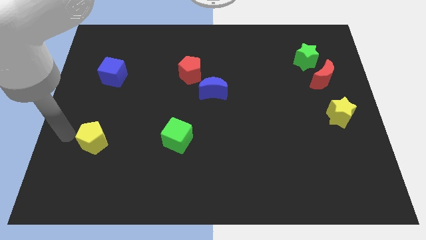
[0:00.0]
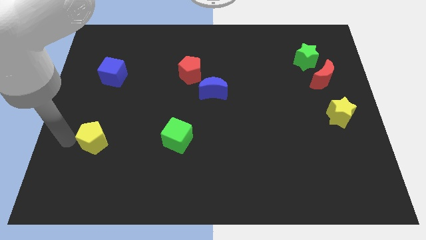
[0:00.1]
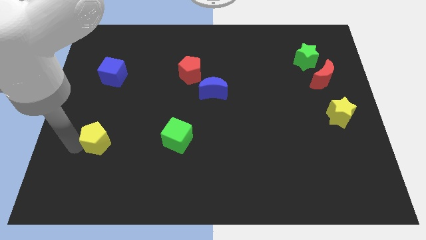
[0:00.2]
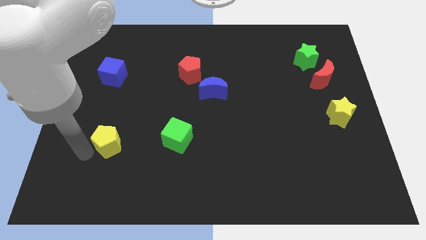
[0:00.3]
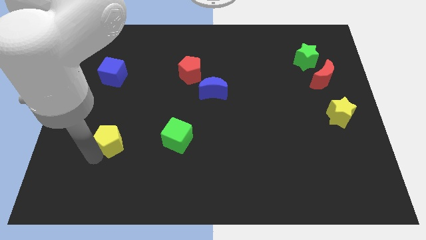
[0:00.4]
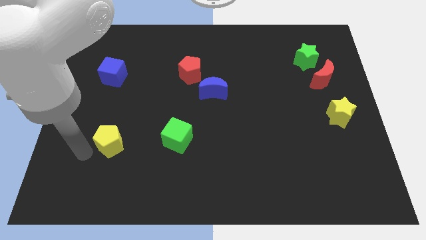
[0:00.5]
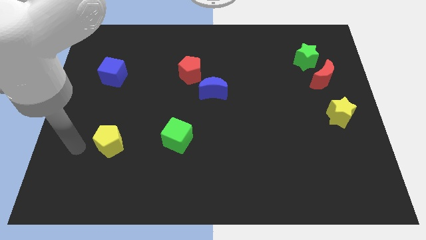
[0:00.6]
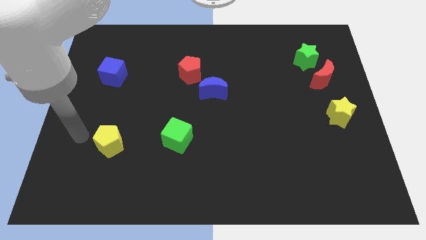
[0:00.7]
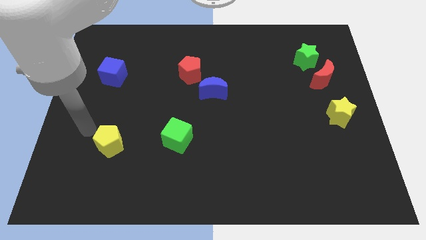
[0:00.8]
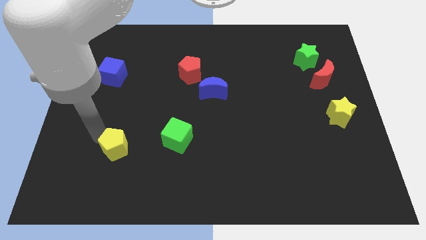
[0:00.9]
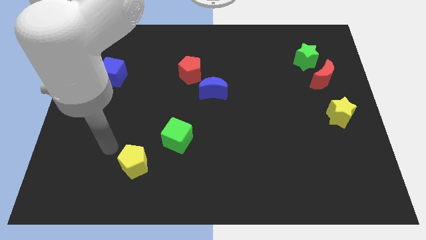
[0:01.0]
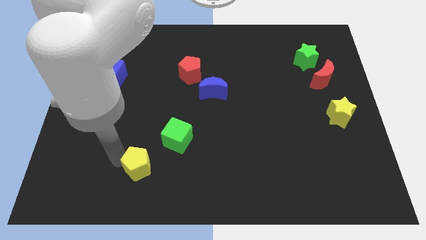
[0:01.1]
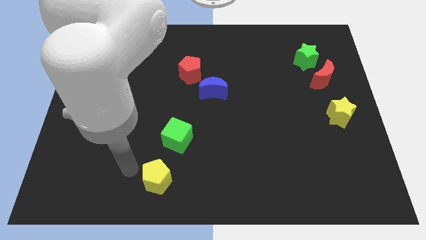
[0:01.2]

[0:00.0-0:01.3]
move the yellow pentagon from that particular place

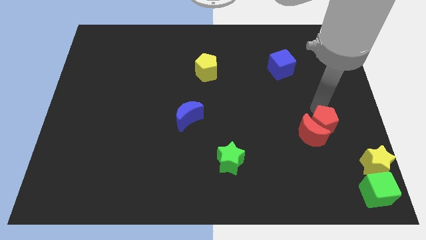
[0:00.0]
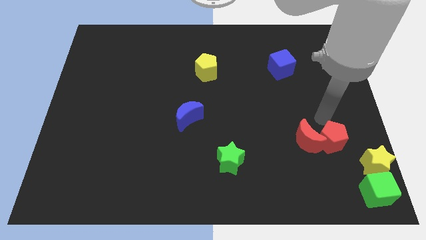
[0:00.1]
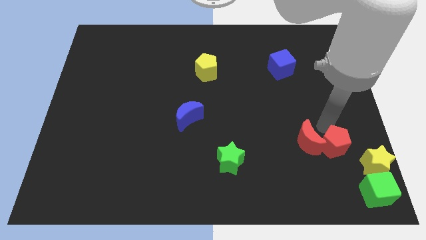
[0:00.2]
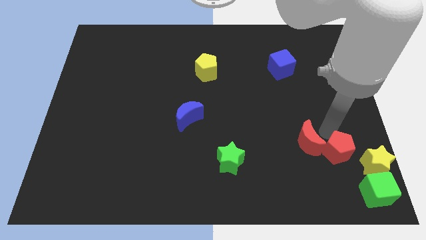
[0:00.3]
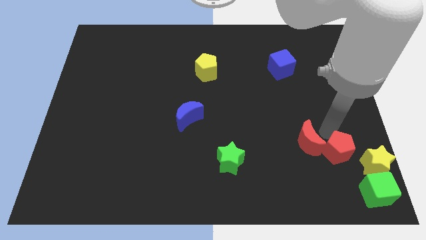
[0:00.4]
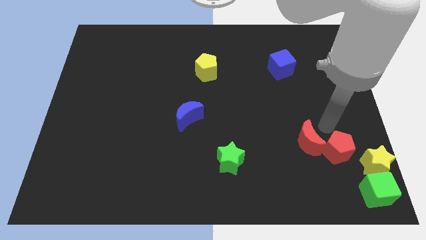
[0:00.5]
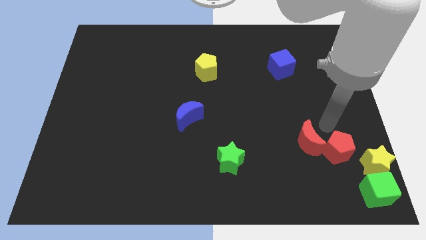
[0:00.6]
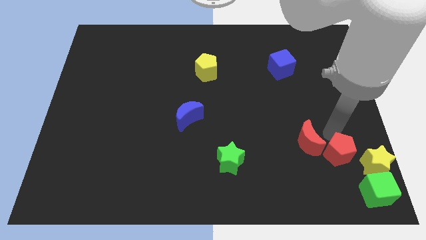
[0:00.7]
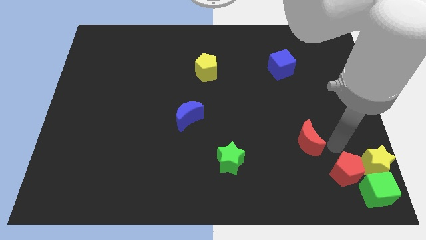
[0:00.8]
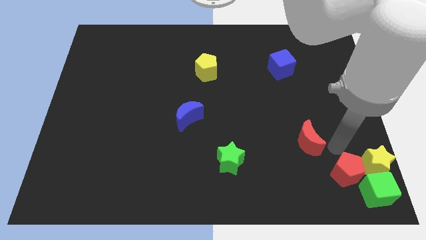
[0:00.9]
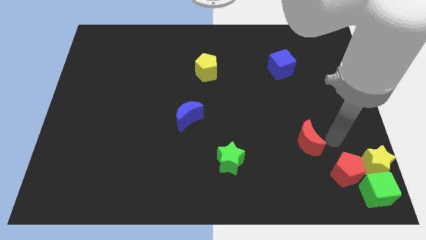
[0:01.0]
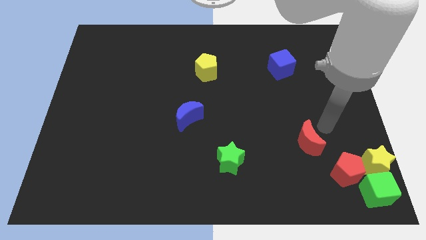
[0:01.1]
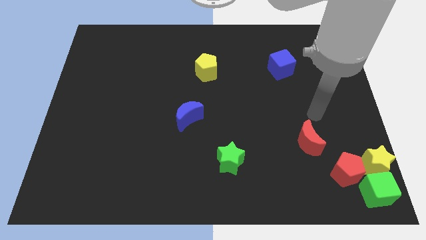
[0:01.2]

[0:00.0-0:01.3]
push the red pentagon to the left of the yellow star

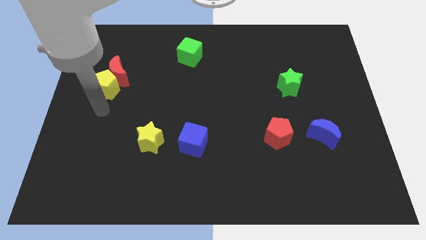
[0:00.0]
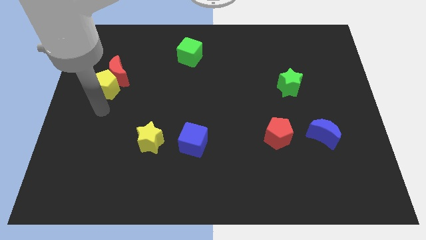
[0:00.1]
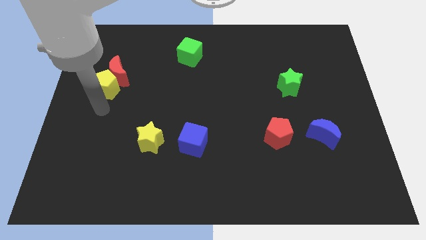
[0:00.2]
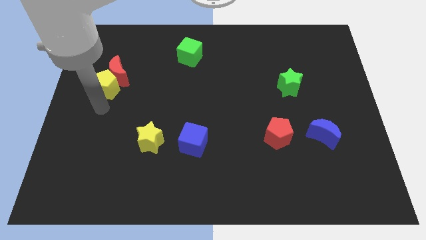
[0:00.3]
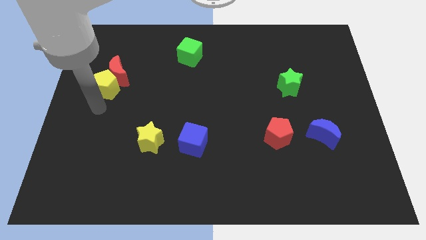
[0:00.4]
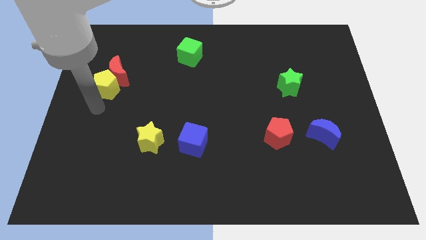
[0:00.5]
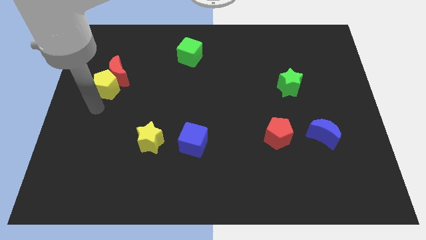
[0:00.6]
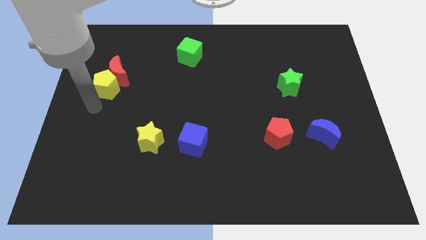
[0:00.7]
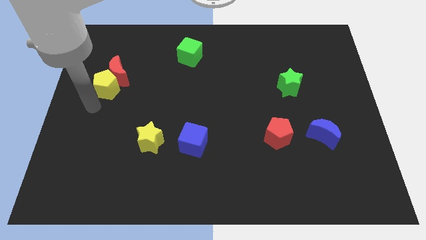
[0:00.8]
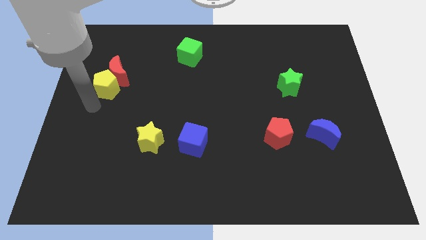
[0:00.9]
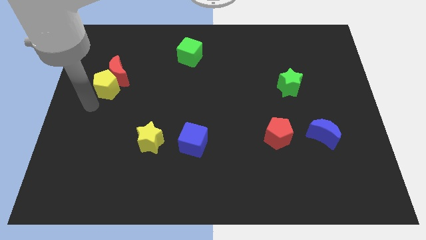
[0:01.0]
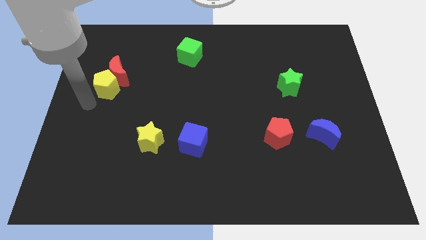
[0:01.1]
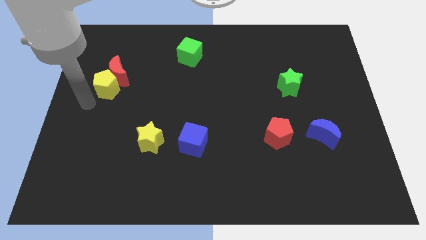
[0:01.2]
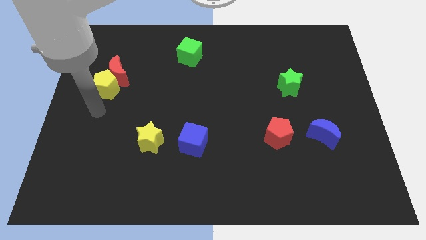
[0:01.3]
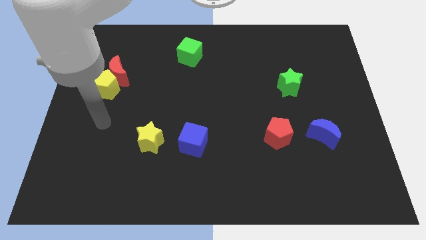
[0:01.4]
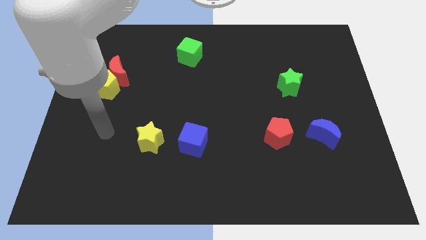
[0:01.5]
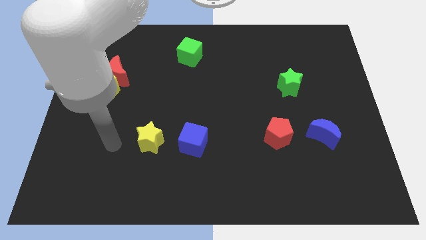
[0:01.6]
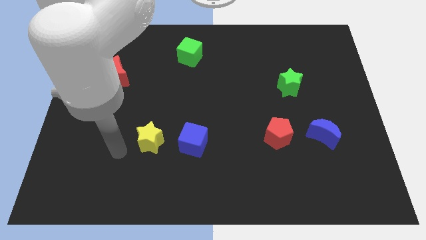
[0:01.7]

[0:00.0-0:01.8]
move your hand to the left of the yellow star

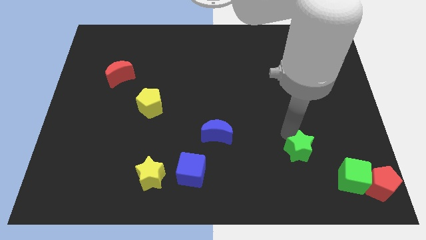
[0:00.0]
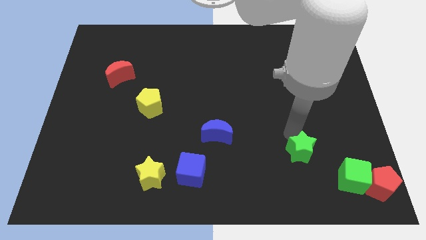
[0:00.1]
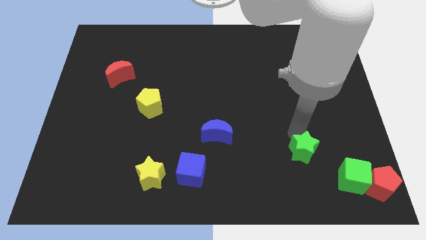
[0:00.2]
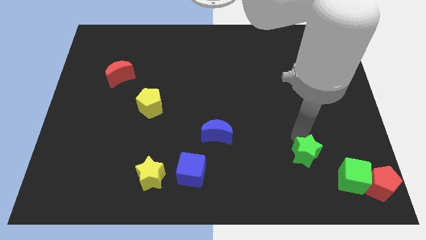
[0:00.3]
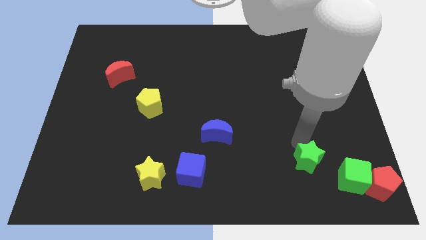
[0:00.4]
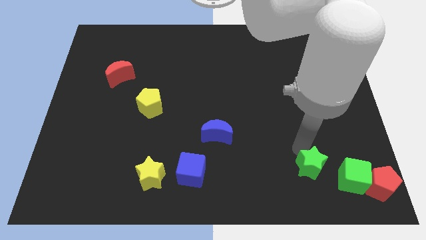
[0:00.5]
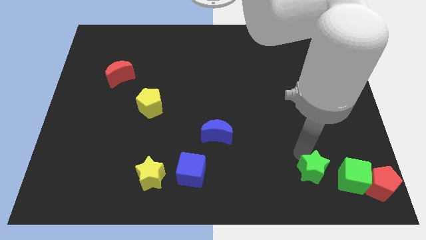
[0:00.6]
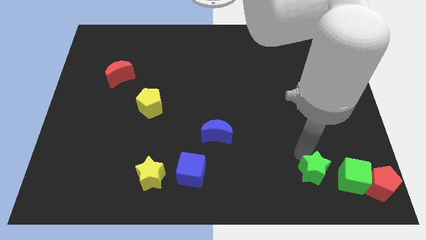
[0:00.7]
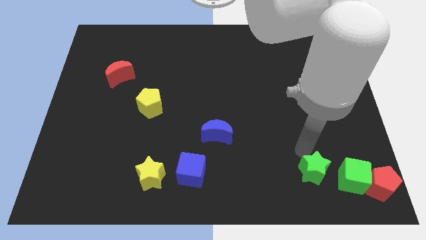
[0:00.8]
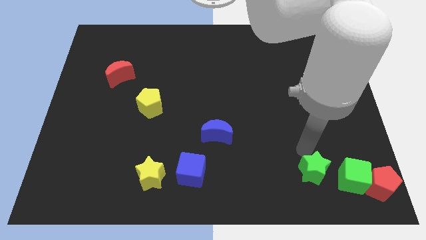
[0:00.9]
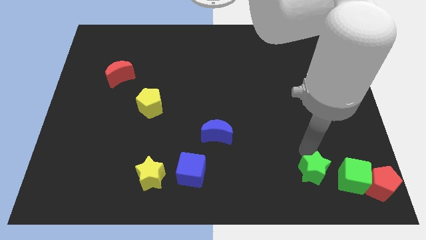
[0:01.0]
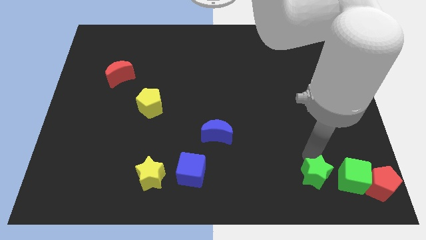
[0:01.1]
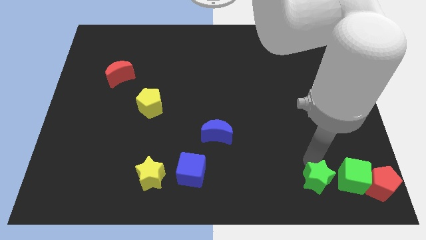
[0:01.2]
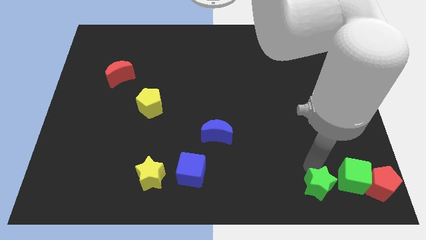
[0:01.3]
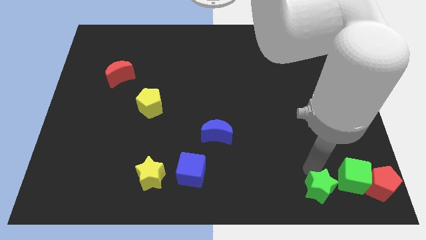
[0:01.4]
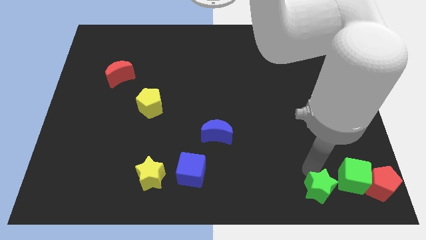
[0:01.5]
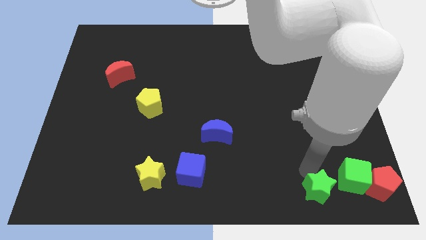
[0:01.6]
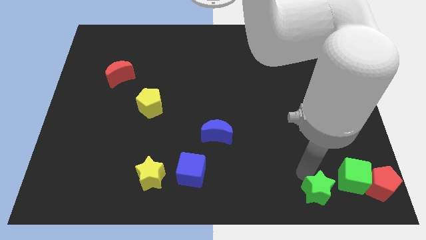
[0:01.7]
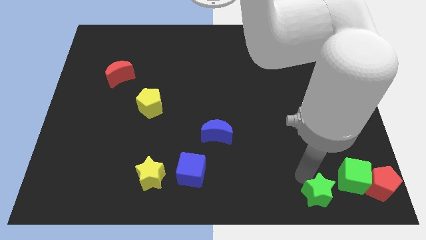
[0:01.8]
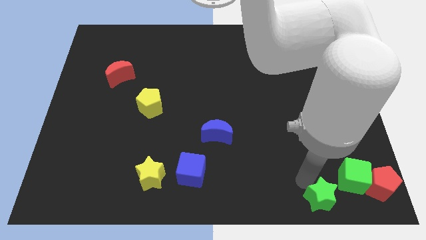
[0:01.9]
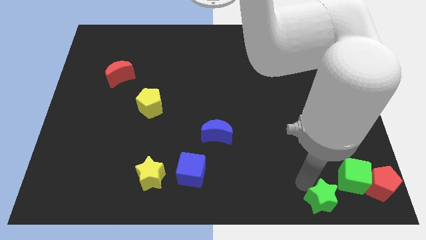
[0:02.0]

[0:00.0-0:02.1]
push the green star closer to the green cube

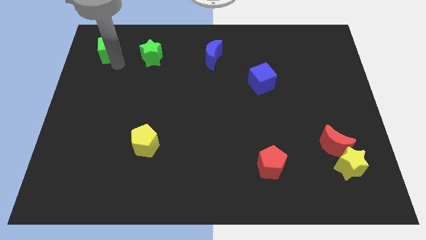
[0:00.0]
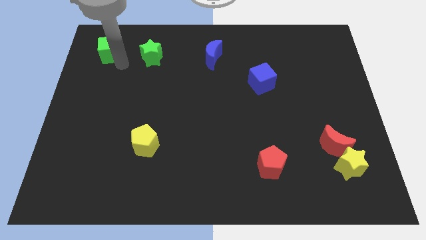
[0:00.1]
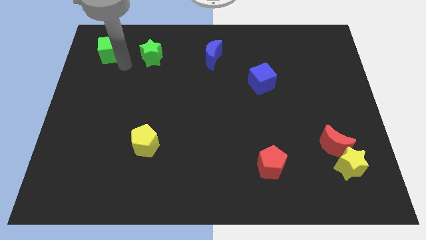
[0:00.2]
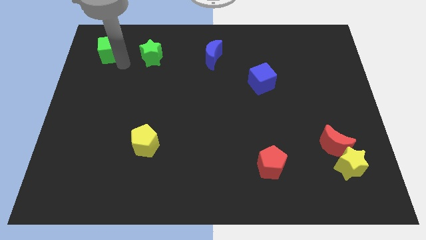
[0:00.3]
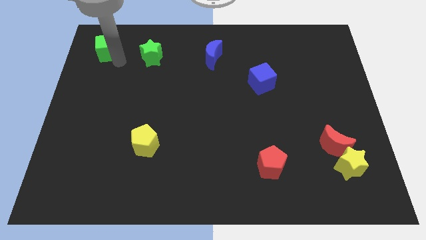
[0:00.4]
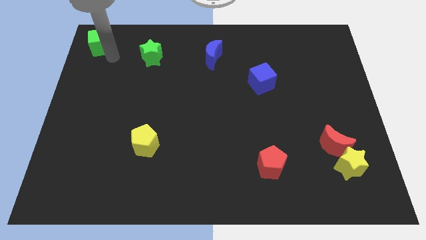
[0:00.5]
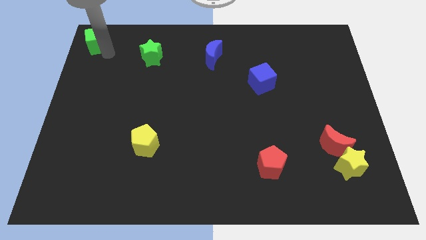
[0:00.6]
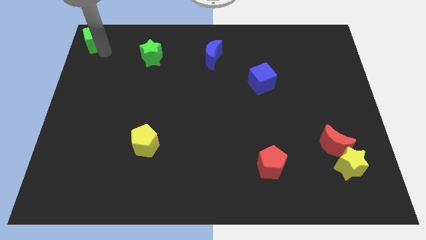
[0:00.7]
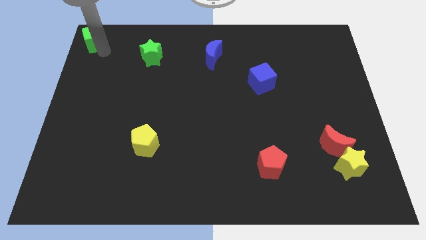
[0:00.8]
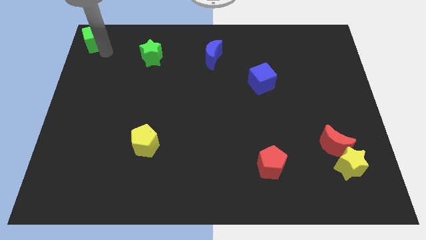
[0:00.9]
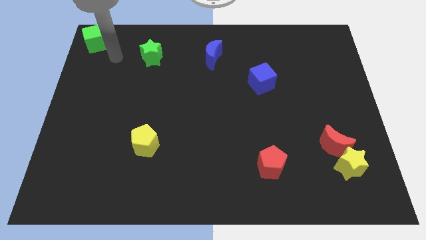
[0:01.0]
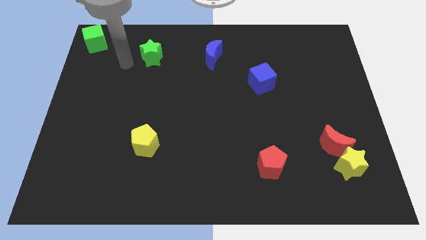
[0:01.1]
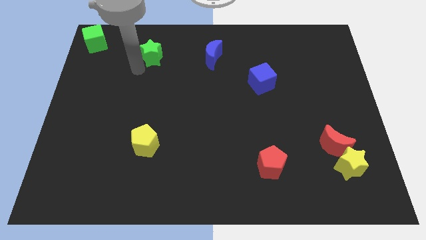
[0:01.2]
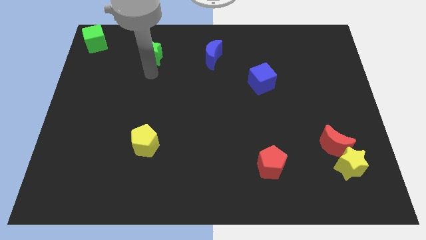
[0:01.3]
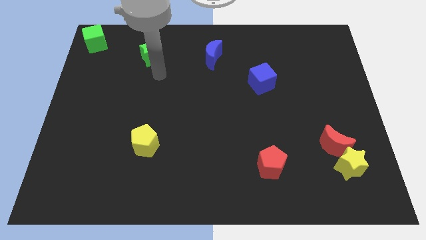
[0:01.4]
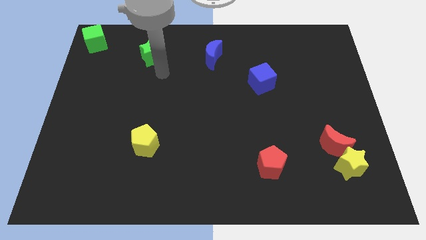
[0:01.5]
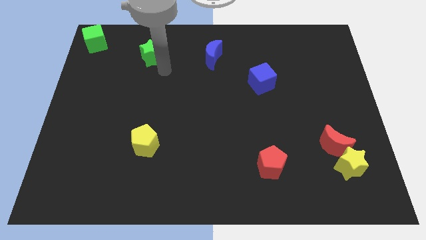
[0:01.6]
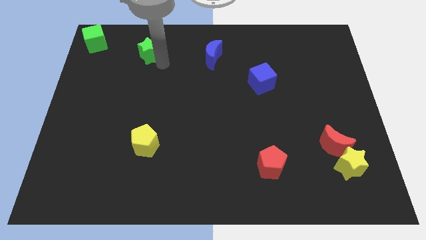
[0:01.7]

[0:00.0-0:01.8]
move the green cube to the top left

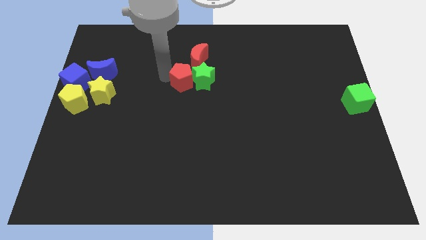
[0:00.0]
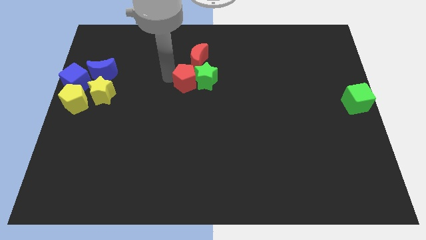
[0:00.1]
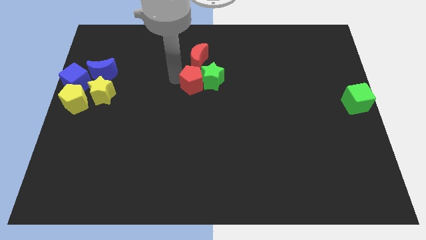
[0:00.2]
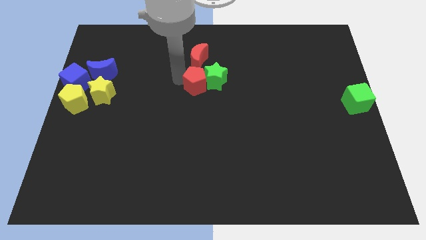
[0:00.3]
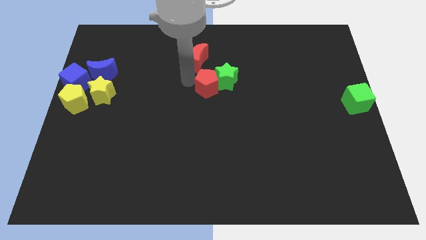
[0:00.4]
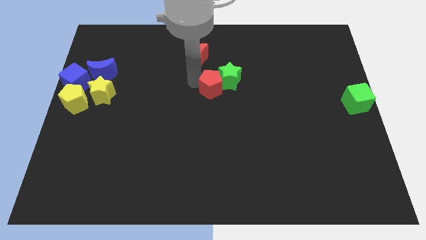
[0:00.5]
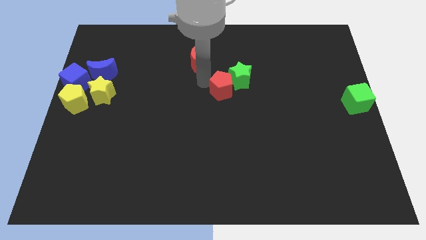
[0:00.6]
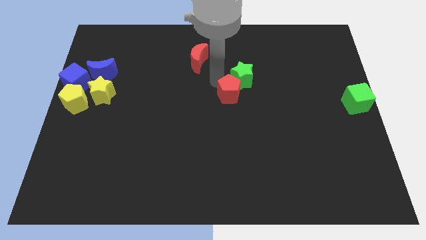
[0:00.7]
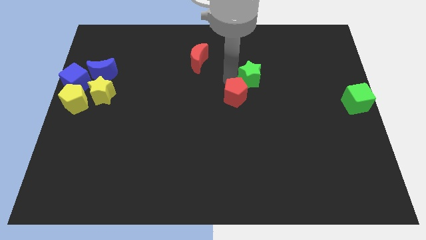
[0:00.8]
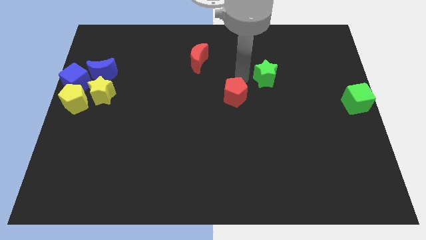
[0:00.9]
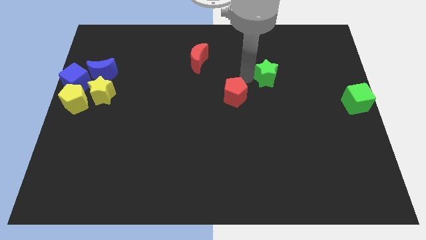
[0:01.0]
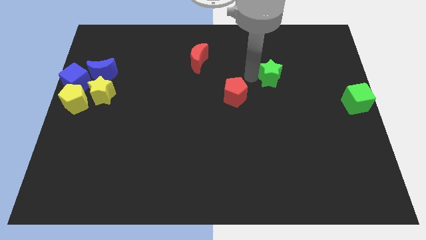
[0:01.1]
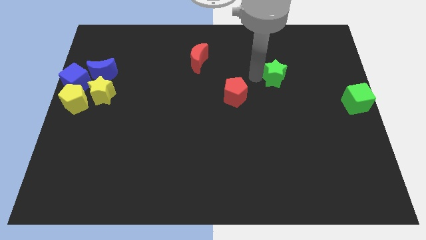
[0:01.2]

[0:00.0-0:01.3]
push the red pentagon into the green star
